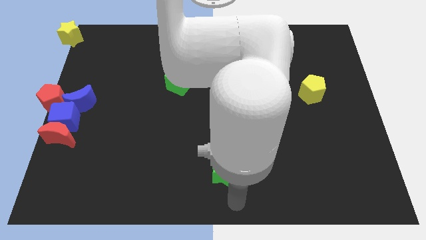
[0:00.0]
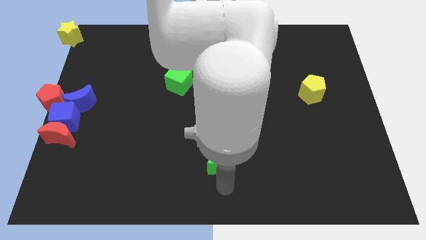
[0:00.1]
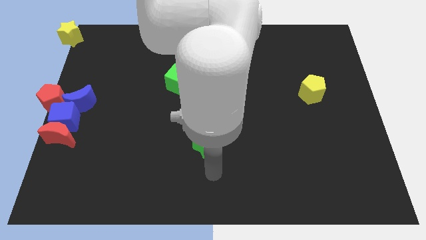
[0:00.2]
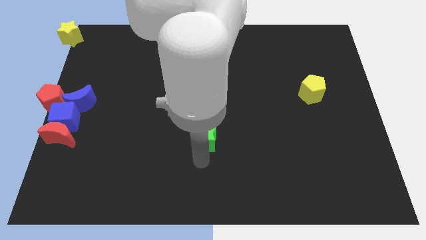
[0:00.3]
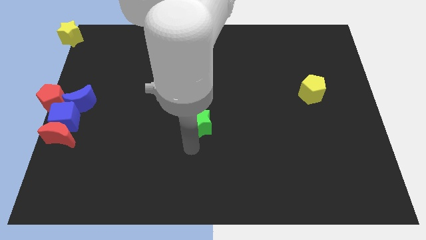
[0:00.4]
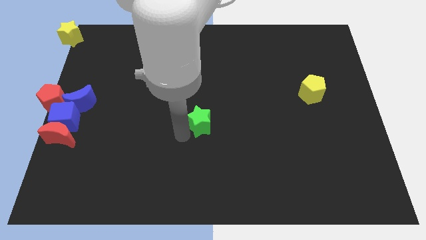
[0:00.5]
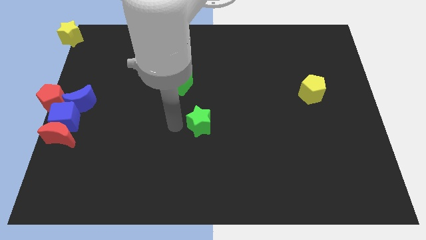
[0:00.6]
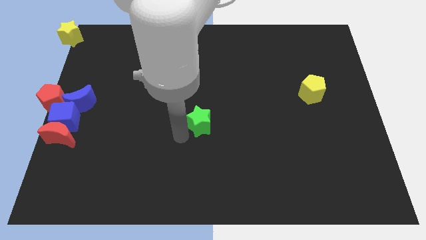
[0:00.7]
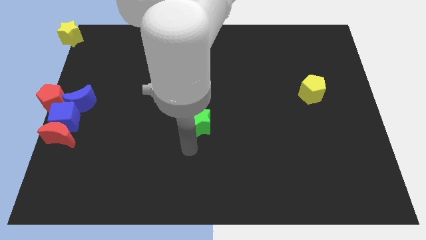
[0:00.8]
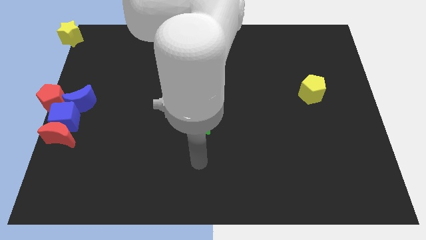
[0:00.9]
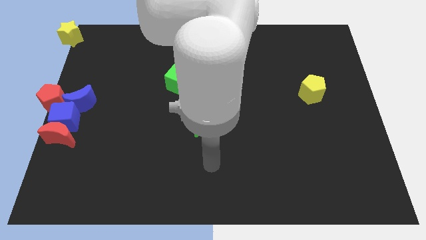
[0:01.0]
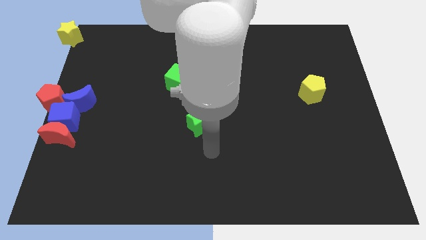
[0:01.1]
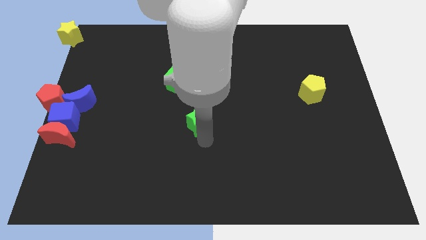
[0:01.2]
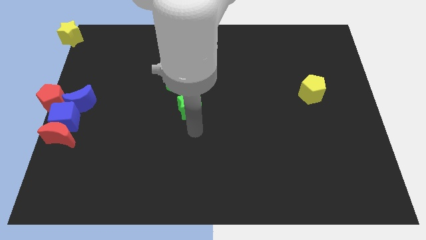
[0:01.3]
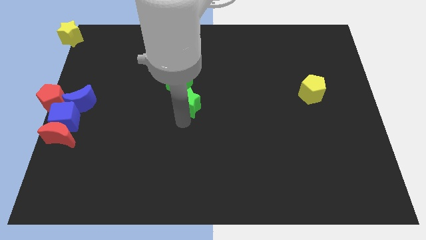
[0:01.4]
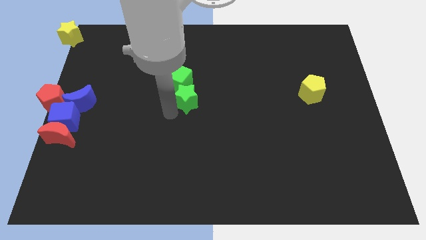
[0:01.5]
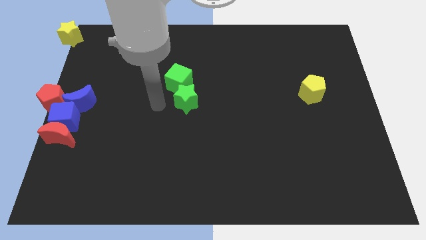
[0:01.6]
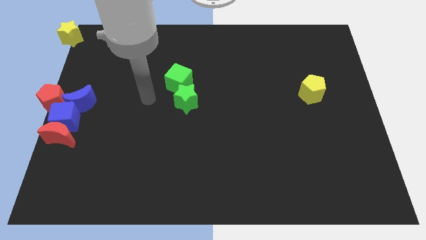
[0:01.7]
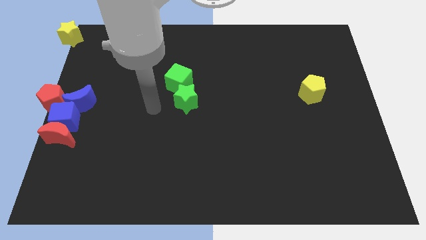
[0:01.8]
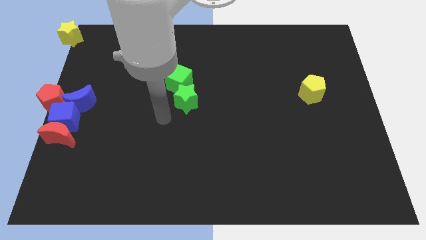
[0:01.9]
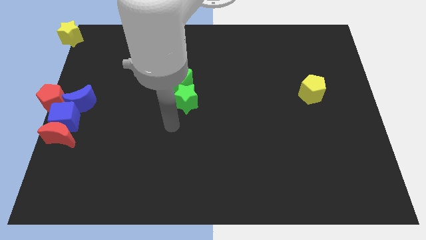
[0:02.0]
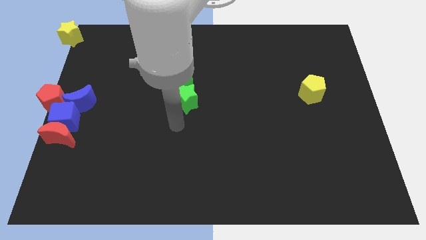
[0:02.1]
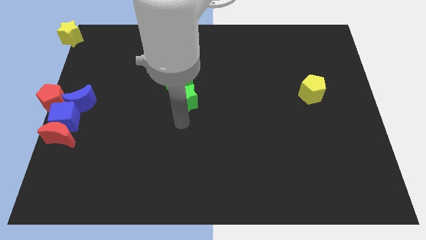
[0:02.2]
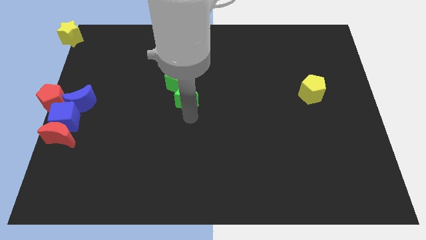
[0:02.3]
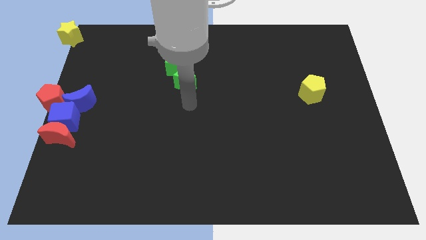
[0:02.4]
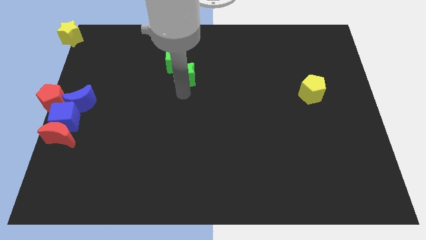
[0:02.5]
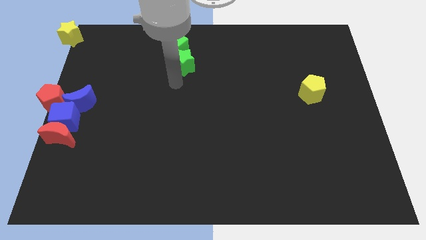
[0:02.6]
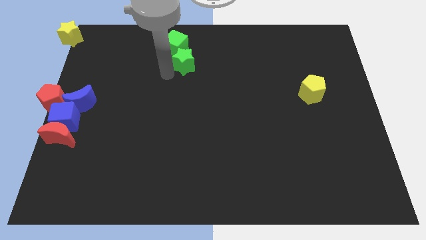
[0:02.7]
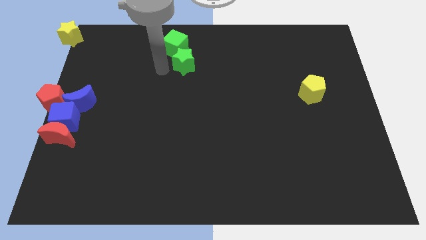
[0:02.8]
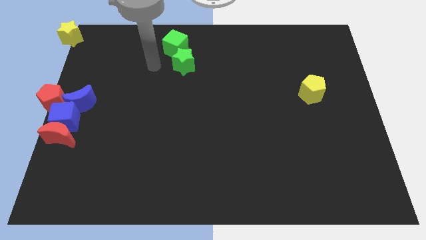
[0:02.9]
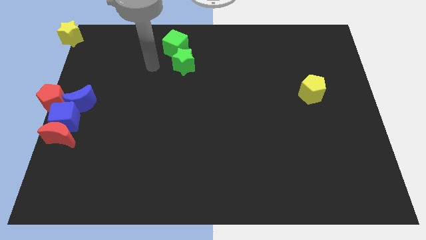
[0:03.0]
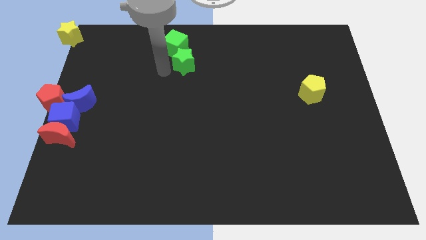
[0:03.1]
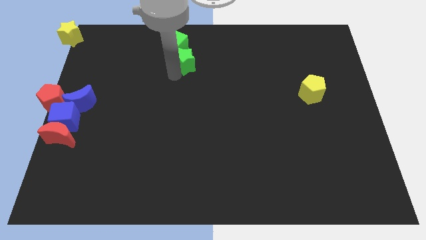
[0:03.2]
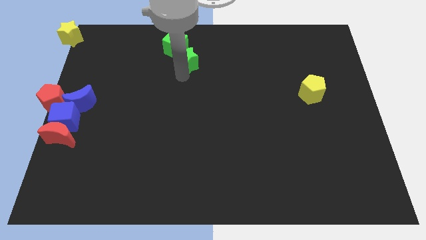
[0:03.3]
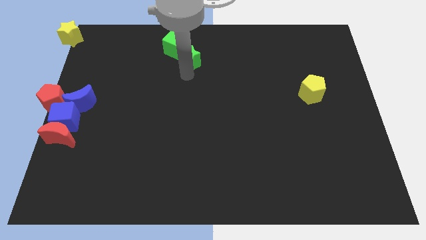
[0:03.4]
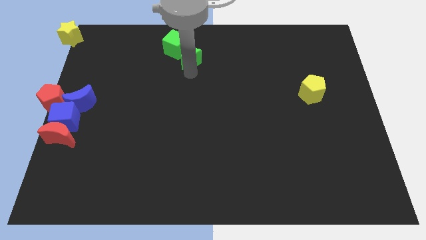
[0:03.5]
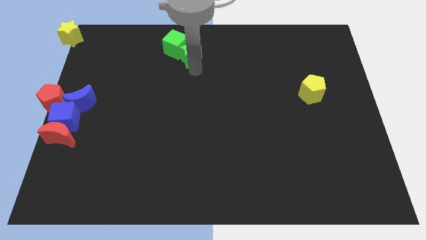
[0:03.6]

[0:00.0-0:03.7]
push the green star to the top of the board

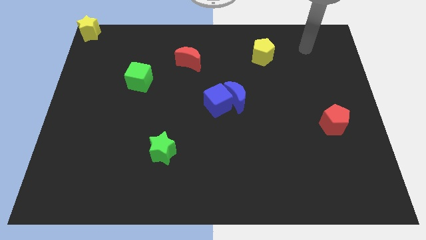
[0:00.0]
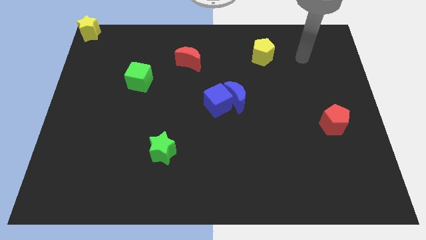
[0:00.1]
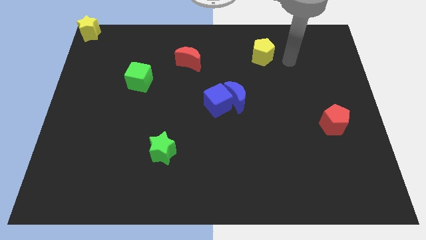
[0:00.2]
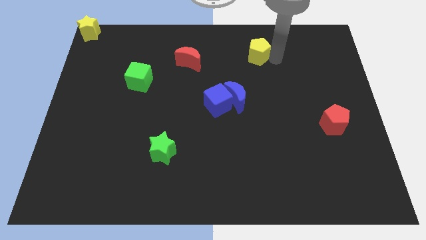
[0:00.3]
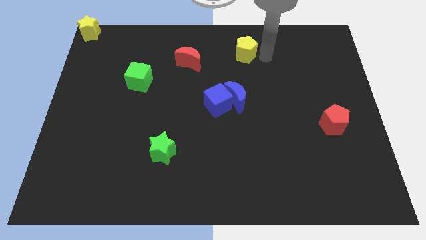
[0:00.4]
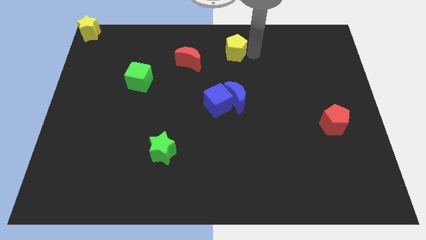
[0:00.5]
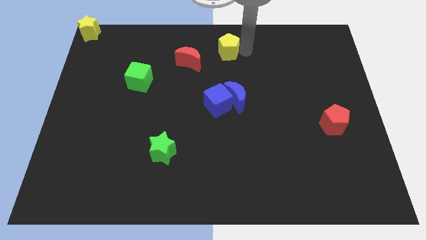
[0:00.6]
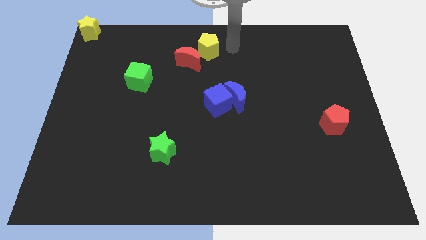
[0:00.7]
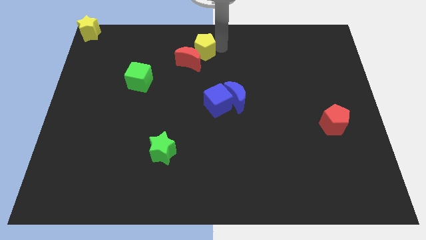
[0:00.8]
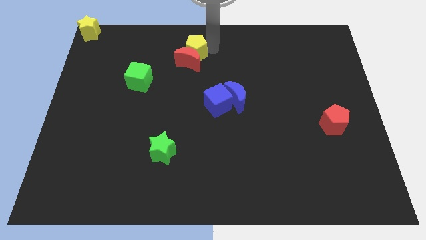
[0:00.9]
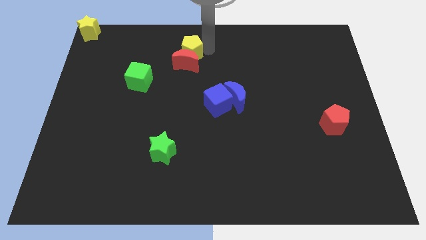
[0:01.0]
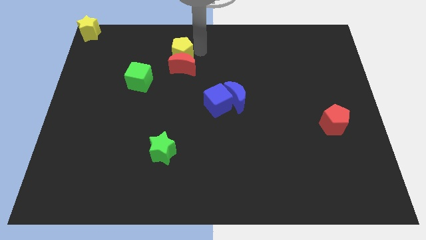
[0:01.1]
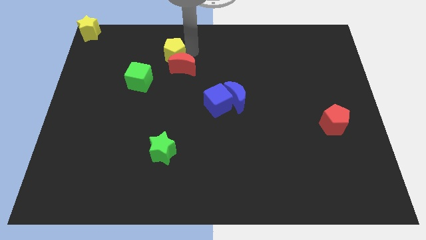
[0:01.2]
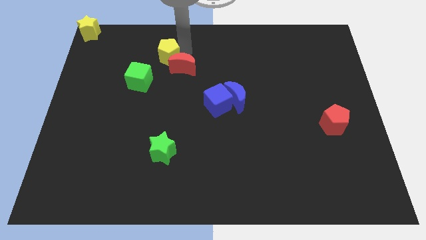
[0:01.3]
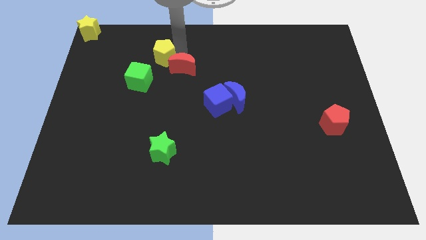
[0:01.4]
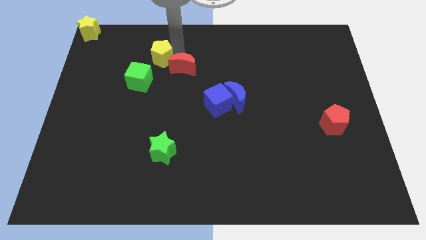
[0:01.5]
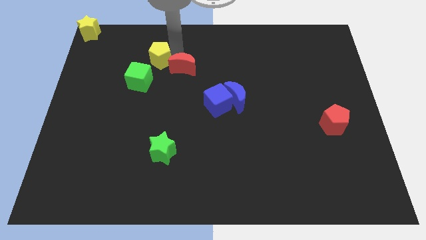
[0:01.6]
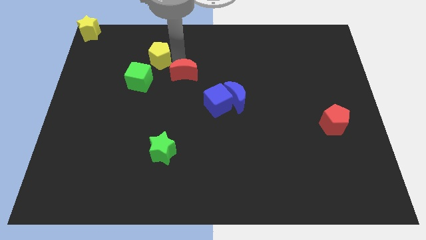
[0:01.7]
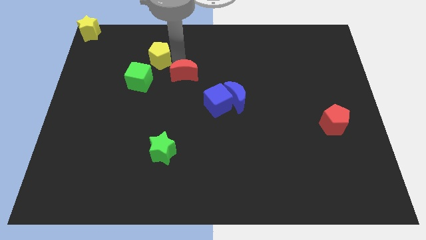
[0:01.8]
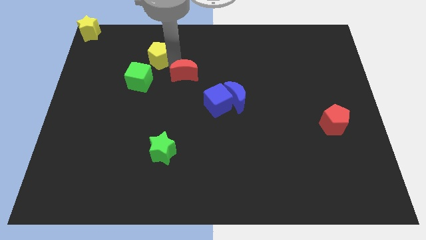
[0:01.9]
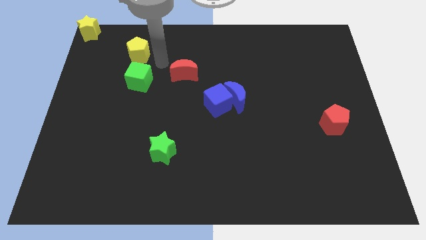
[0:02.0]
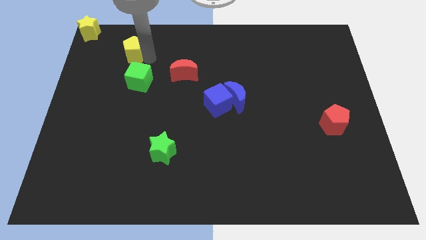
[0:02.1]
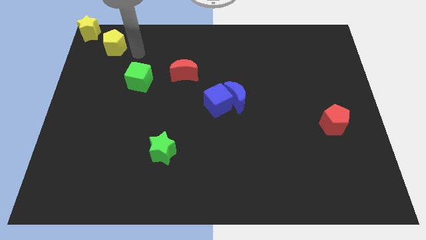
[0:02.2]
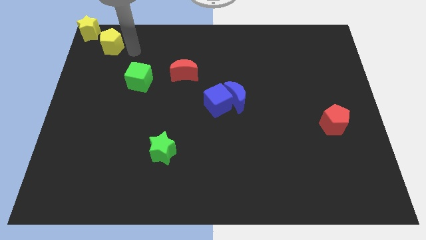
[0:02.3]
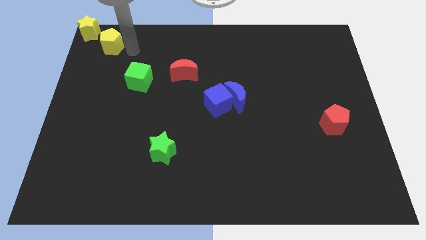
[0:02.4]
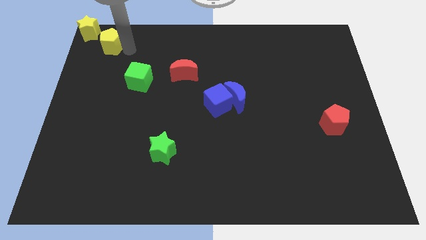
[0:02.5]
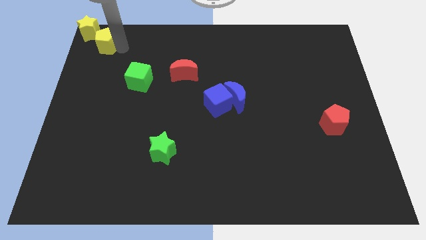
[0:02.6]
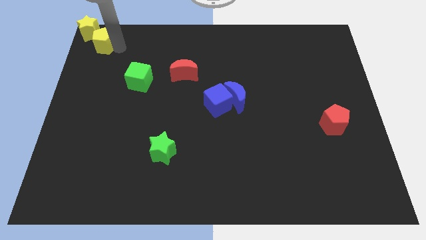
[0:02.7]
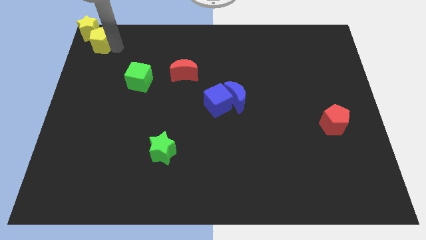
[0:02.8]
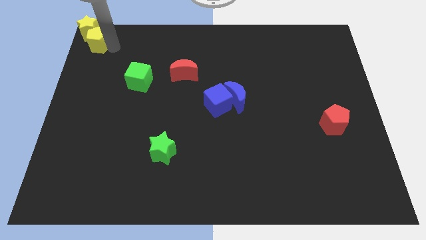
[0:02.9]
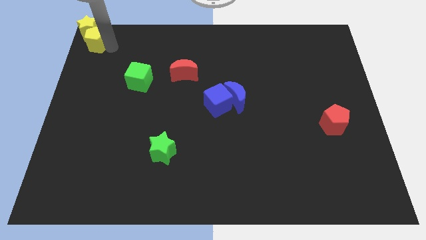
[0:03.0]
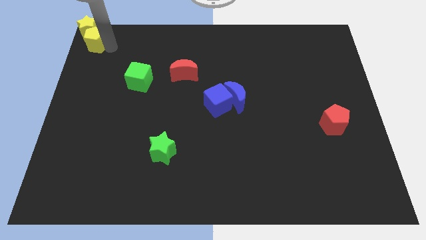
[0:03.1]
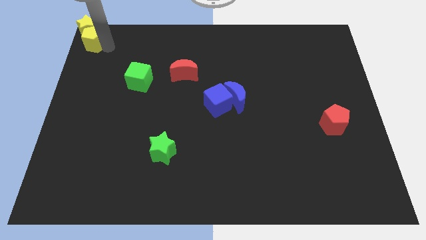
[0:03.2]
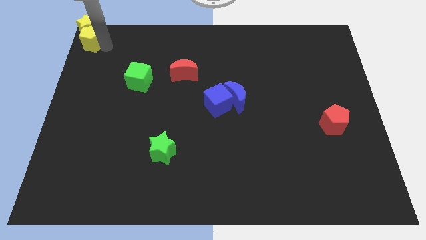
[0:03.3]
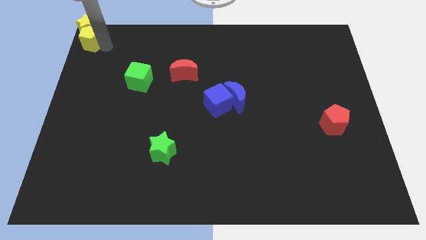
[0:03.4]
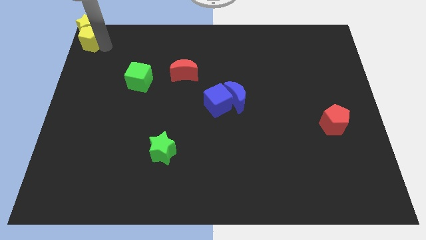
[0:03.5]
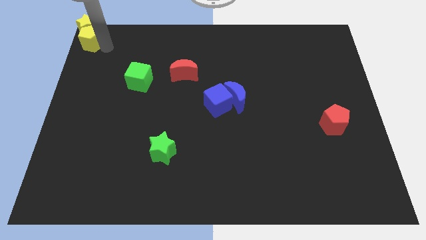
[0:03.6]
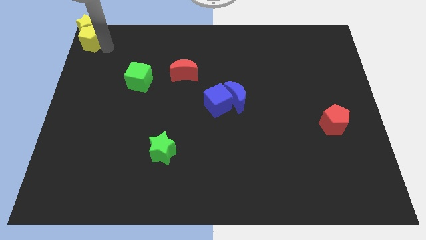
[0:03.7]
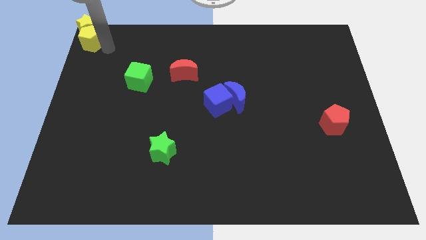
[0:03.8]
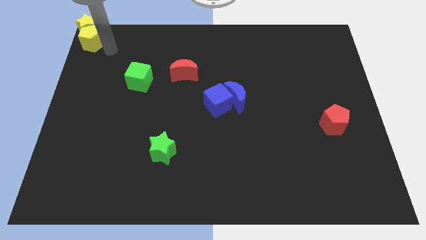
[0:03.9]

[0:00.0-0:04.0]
place yellow pentagon to the bottom of yellow star

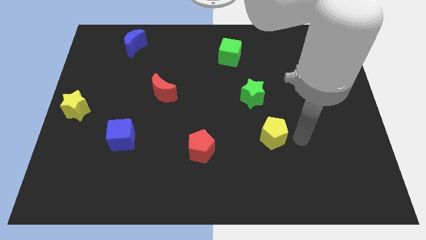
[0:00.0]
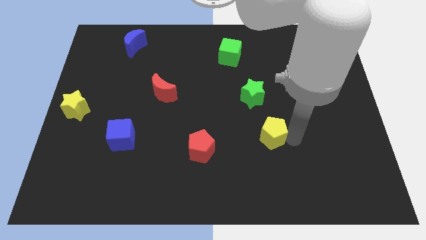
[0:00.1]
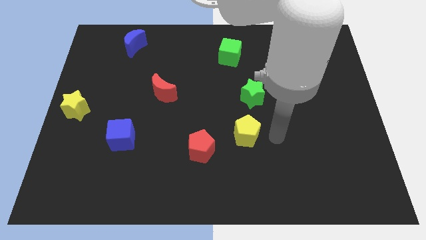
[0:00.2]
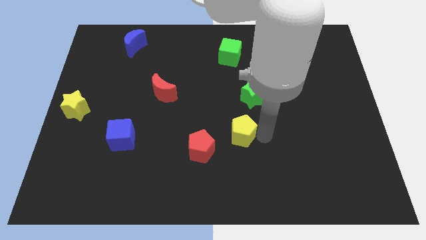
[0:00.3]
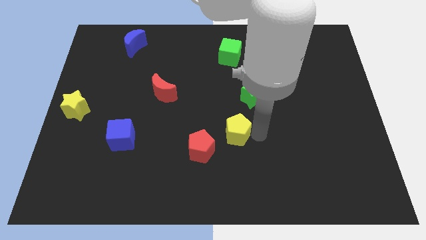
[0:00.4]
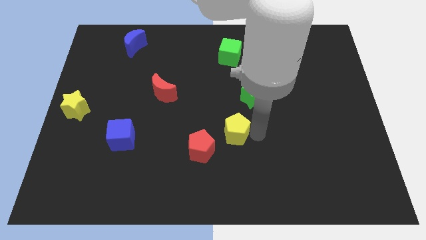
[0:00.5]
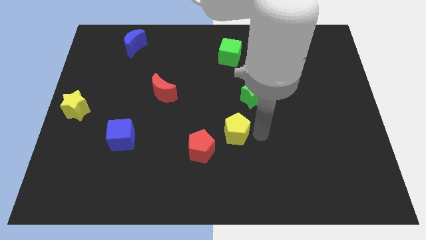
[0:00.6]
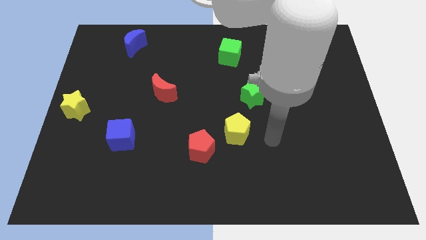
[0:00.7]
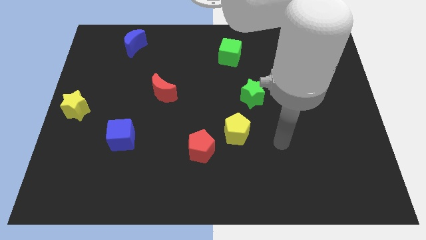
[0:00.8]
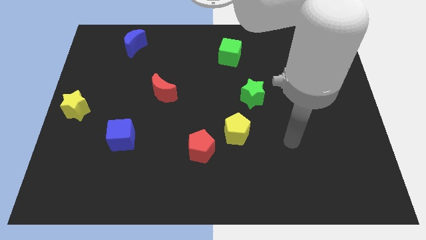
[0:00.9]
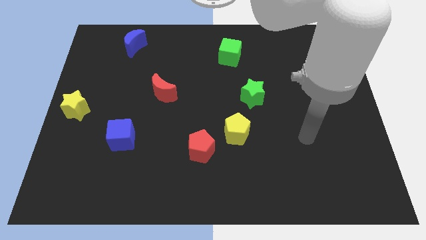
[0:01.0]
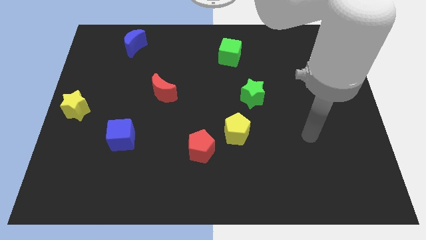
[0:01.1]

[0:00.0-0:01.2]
slide yellow pentagon towards red pentagon

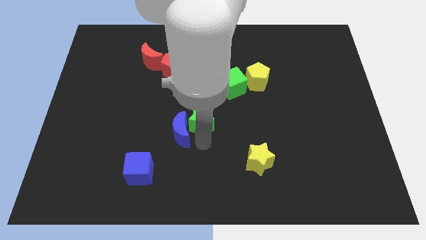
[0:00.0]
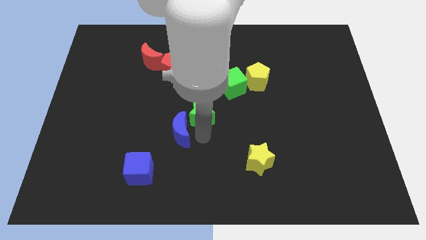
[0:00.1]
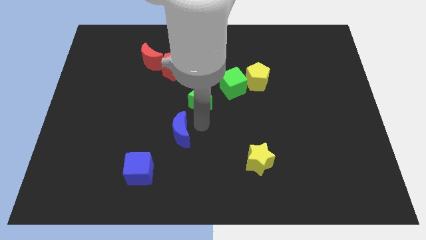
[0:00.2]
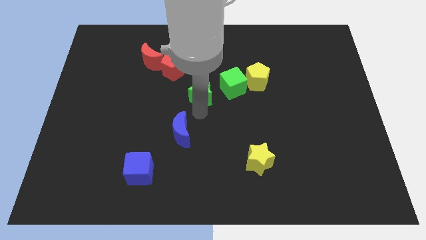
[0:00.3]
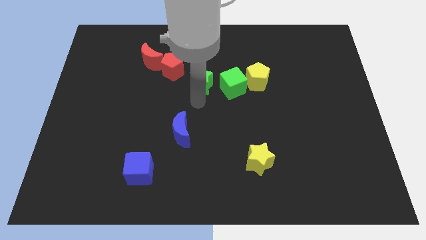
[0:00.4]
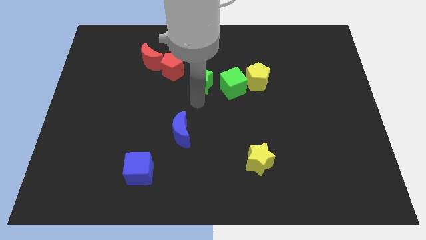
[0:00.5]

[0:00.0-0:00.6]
move green star left beside the green cube
